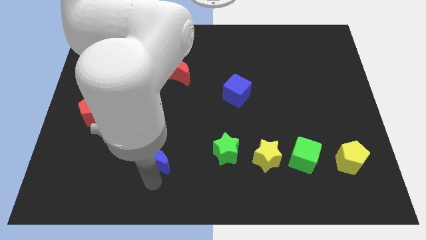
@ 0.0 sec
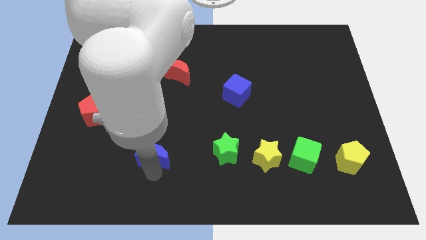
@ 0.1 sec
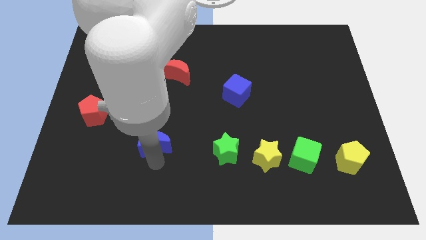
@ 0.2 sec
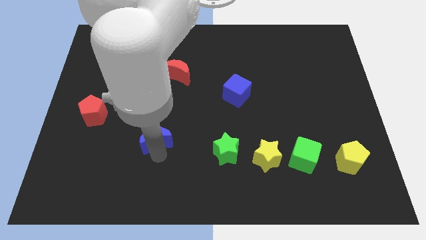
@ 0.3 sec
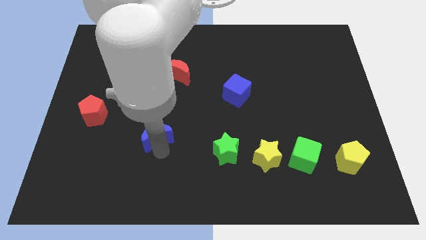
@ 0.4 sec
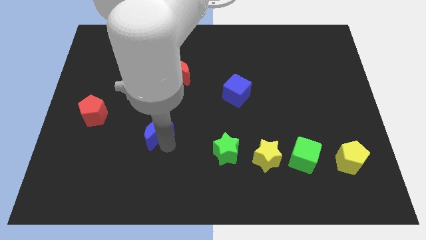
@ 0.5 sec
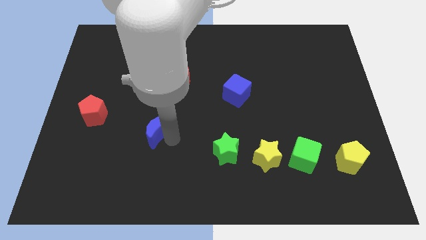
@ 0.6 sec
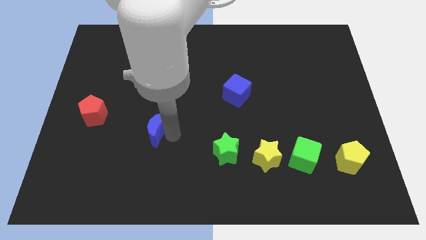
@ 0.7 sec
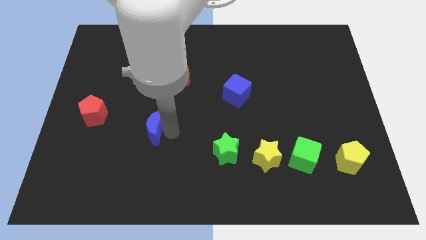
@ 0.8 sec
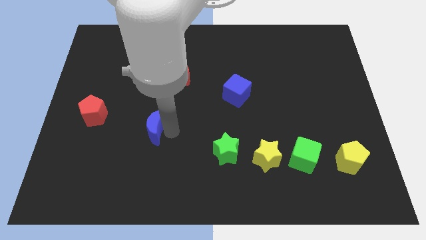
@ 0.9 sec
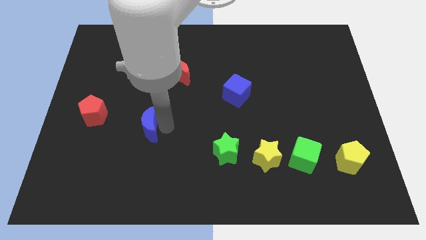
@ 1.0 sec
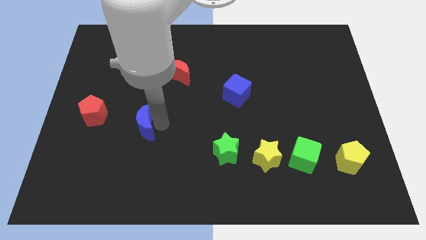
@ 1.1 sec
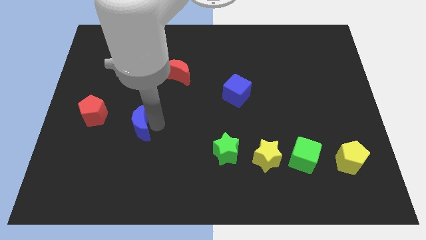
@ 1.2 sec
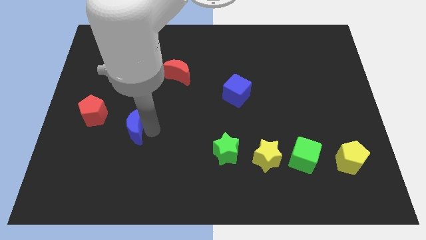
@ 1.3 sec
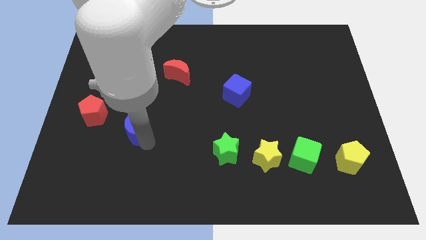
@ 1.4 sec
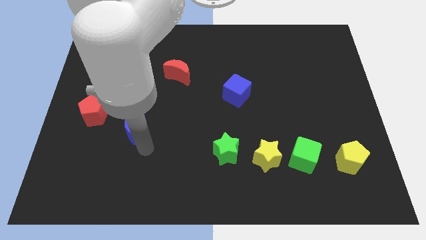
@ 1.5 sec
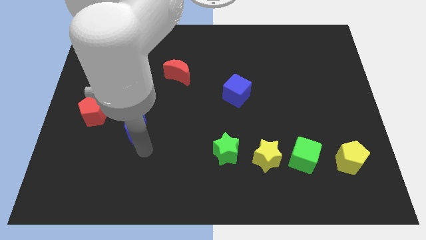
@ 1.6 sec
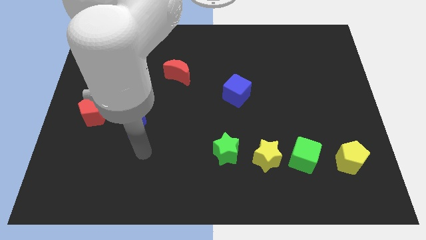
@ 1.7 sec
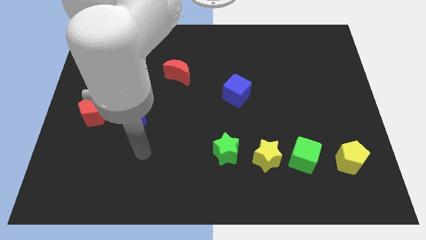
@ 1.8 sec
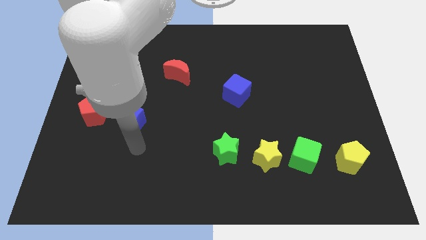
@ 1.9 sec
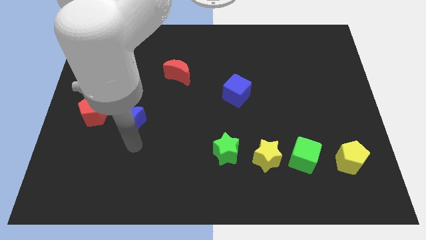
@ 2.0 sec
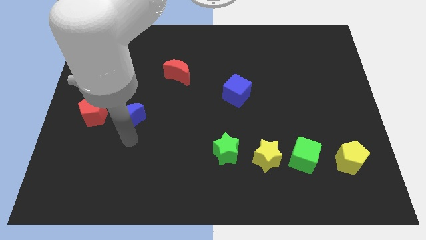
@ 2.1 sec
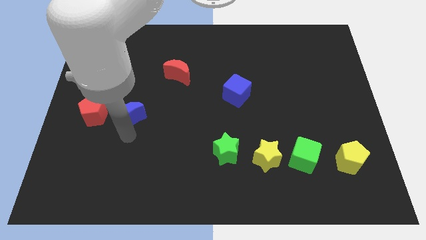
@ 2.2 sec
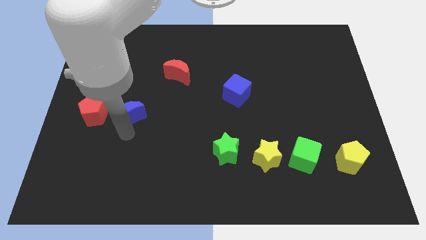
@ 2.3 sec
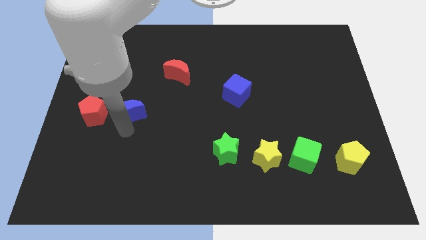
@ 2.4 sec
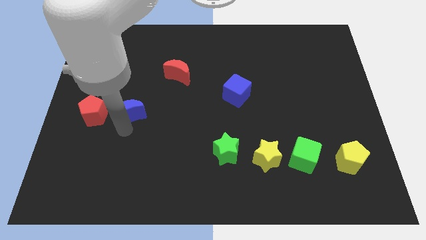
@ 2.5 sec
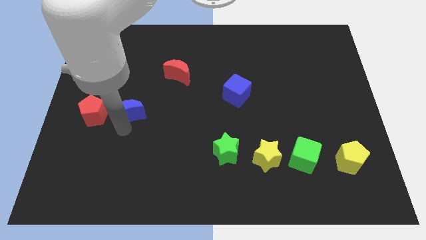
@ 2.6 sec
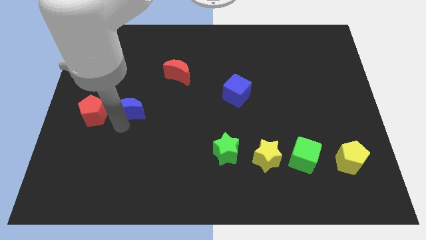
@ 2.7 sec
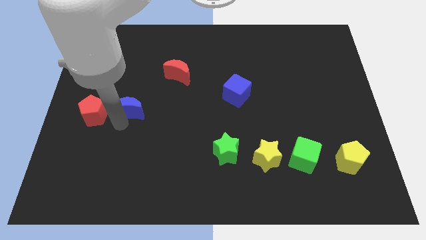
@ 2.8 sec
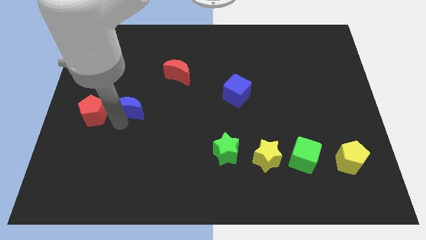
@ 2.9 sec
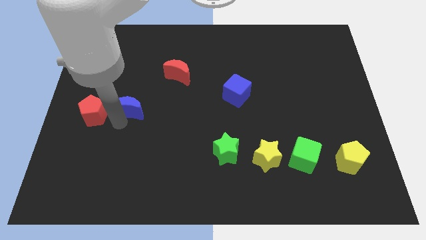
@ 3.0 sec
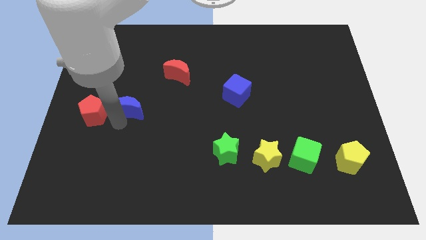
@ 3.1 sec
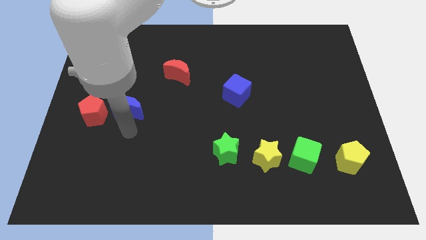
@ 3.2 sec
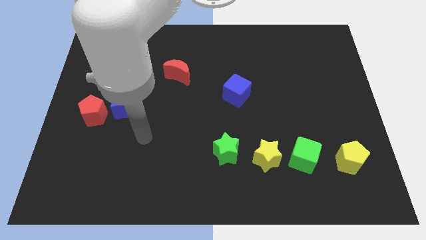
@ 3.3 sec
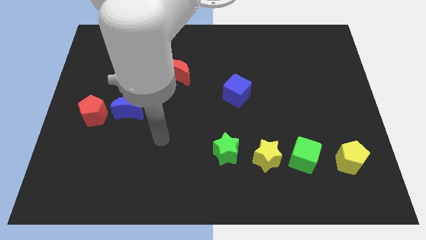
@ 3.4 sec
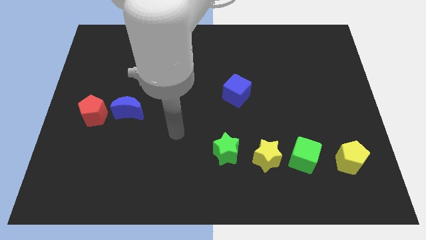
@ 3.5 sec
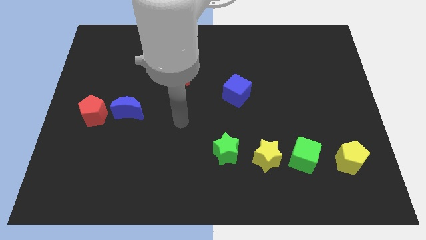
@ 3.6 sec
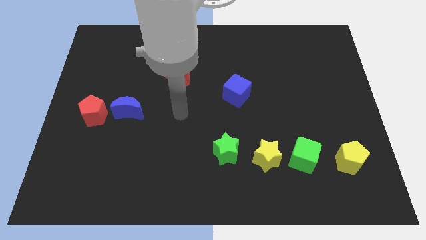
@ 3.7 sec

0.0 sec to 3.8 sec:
move the blue crescent right to the red pentagon

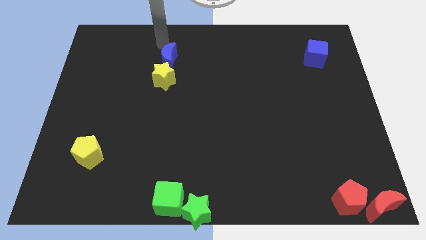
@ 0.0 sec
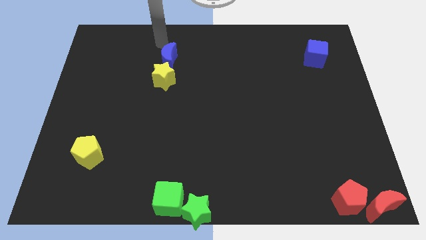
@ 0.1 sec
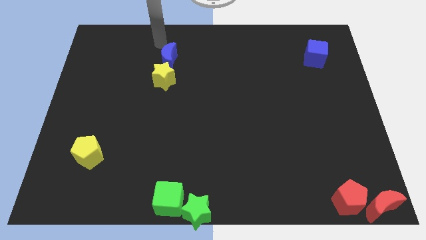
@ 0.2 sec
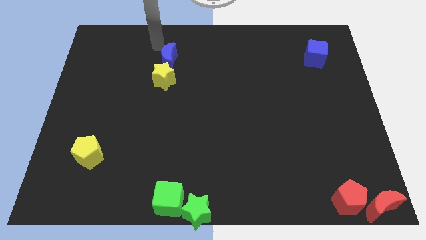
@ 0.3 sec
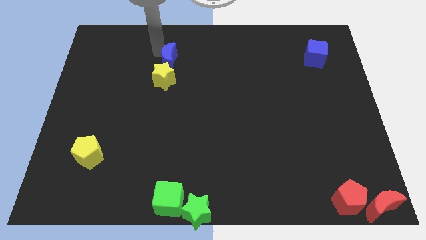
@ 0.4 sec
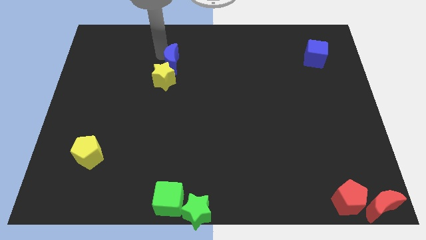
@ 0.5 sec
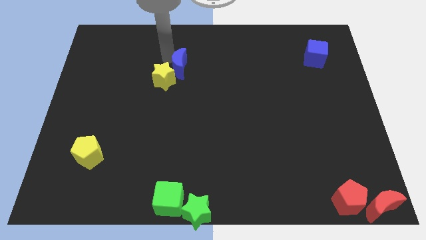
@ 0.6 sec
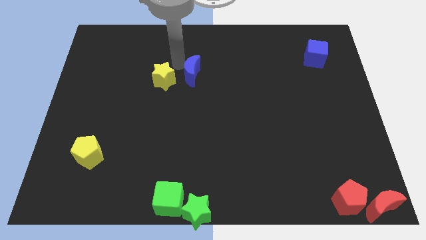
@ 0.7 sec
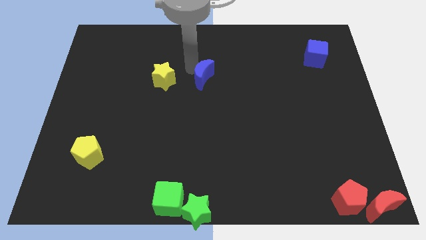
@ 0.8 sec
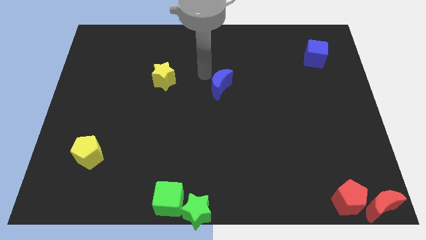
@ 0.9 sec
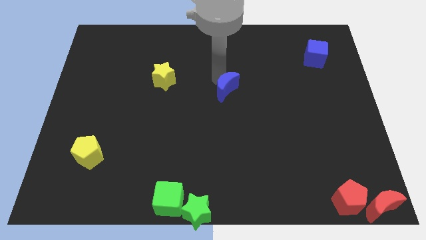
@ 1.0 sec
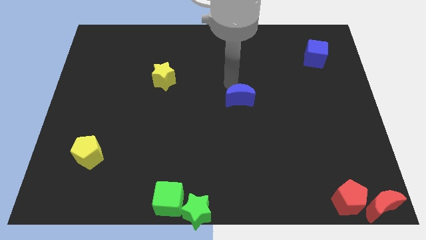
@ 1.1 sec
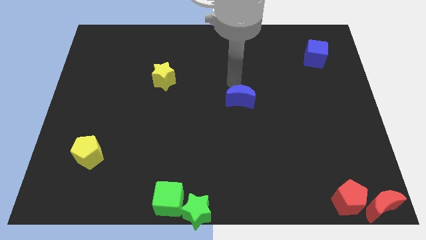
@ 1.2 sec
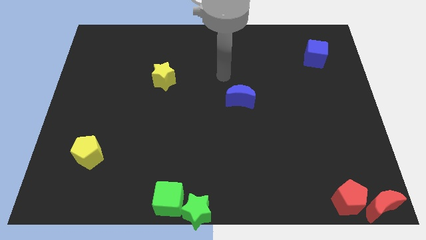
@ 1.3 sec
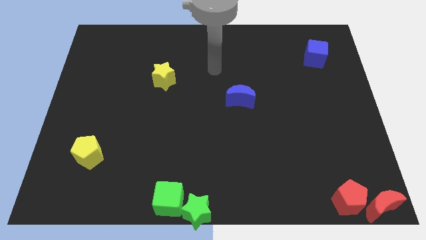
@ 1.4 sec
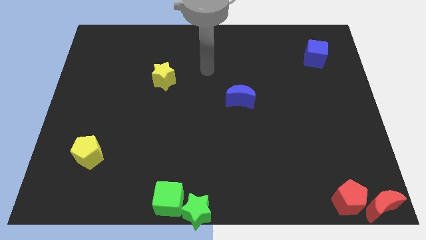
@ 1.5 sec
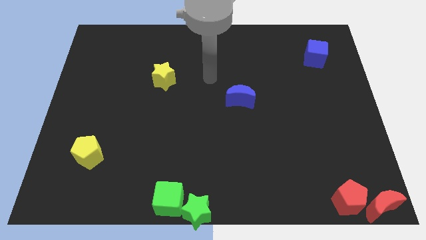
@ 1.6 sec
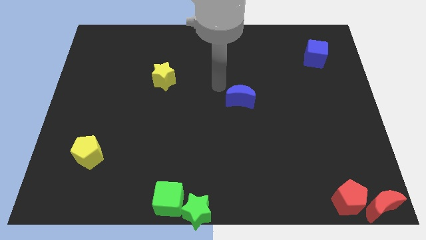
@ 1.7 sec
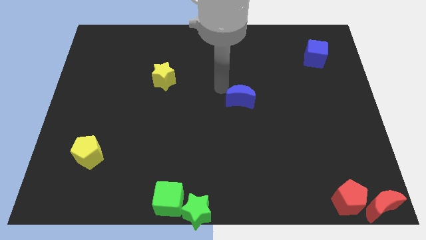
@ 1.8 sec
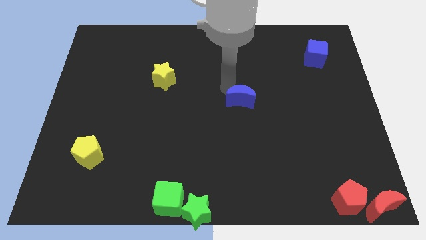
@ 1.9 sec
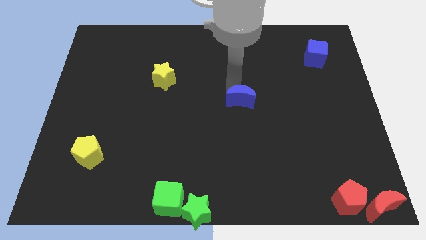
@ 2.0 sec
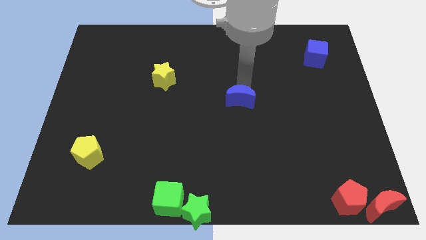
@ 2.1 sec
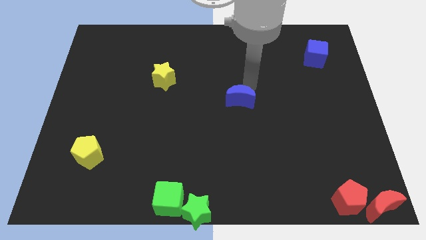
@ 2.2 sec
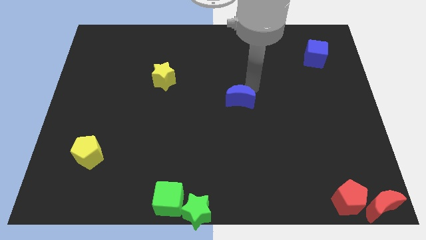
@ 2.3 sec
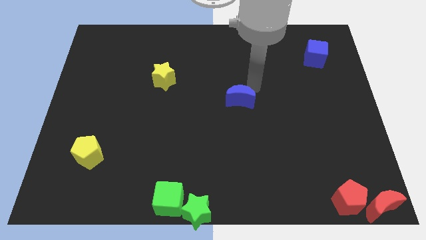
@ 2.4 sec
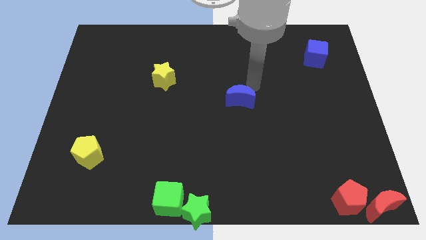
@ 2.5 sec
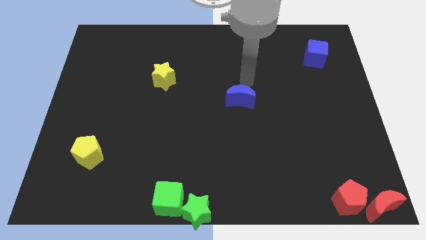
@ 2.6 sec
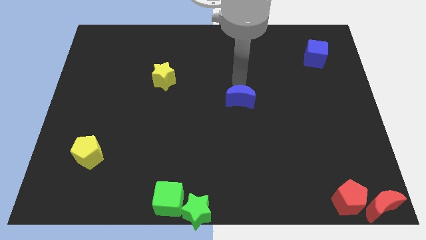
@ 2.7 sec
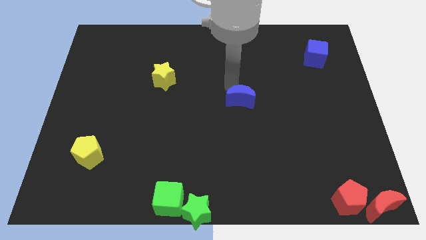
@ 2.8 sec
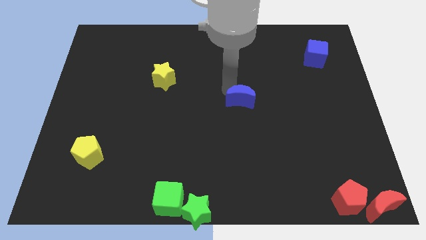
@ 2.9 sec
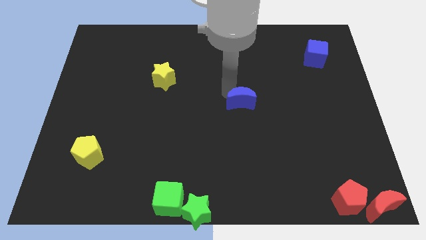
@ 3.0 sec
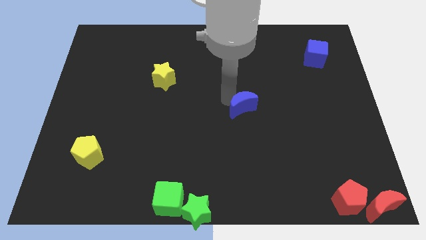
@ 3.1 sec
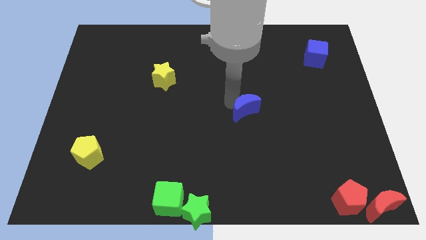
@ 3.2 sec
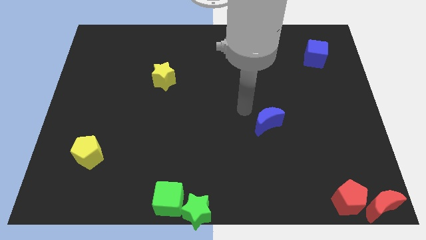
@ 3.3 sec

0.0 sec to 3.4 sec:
separate the blue moon from the yellow star

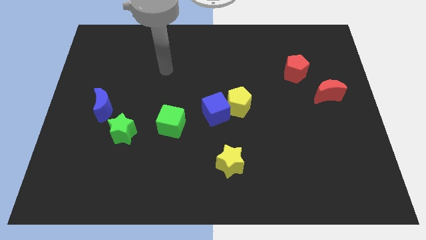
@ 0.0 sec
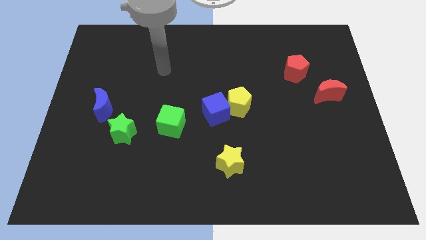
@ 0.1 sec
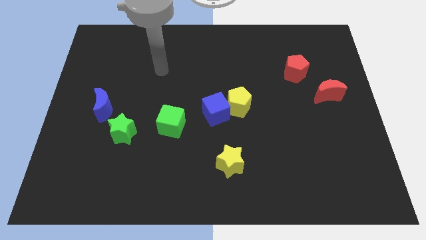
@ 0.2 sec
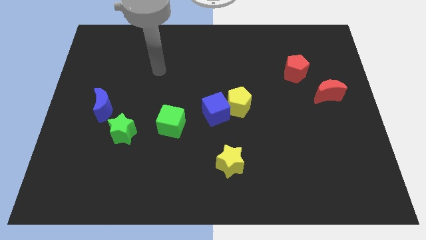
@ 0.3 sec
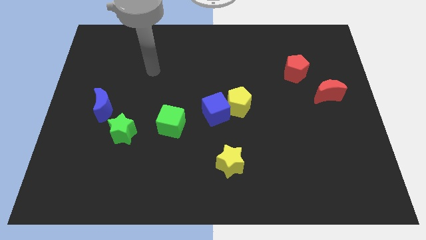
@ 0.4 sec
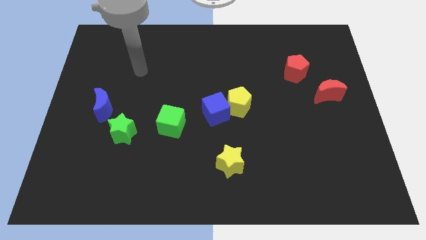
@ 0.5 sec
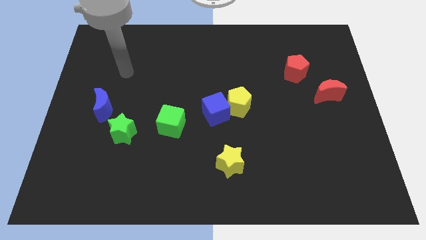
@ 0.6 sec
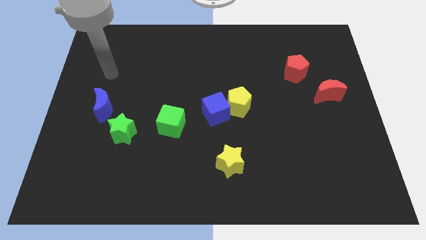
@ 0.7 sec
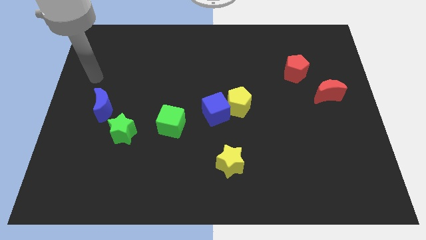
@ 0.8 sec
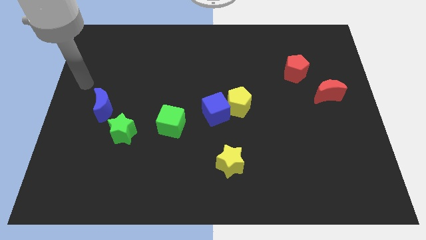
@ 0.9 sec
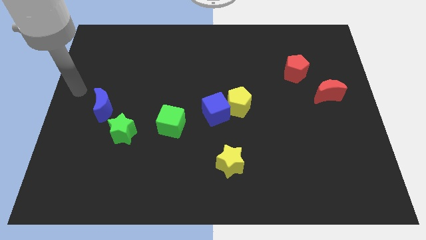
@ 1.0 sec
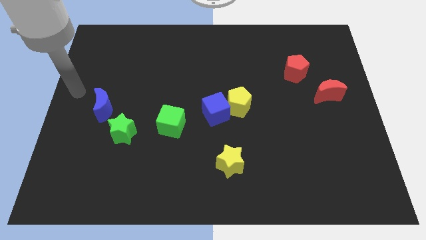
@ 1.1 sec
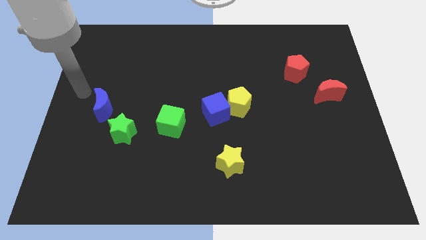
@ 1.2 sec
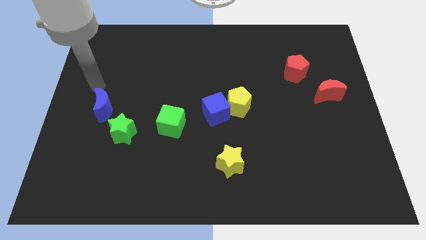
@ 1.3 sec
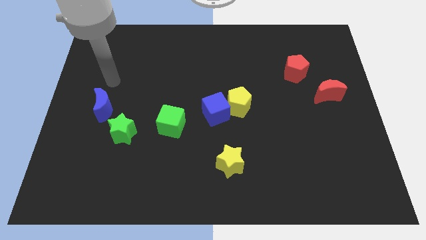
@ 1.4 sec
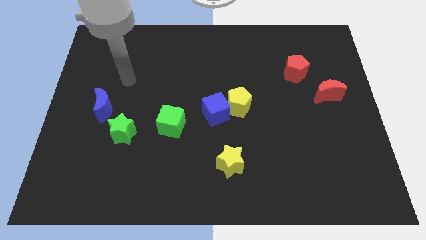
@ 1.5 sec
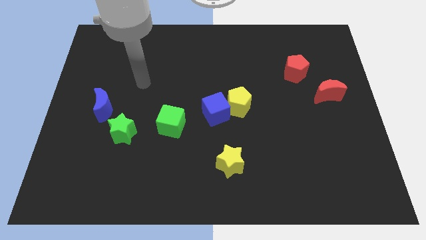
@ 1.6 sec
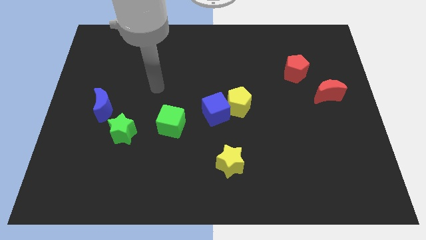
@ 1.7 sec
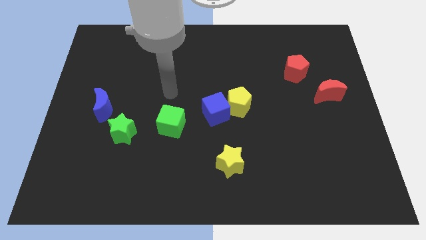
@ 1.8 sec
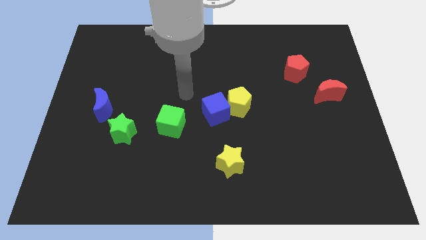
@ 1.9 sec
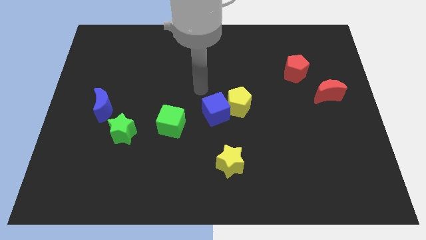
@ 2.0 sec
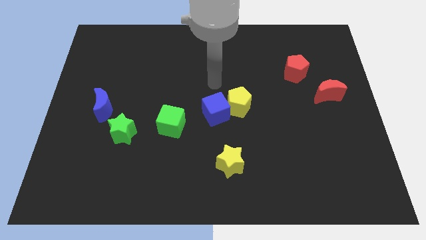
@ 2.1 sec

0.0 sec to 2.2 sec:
point the arm above the blue cube
